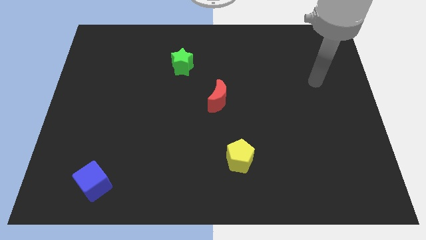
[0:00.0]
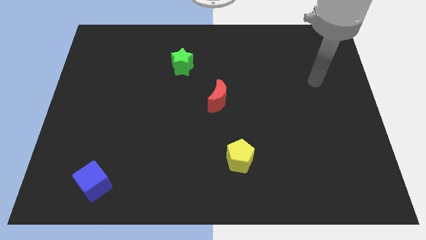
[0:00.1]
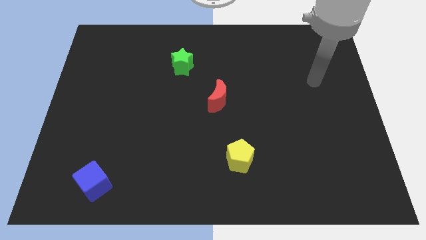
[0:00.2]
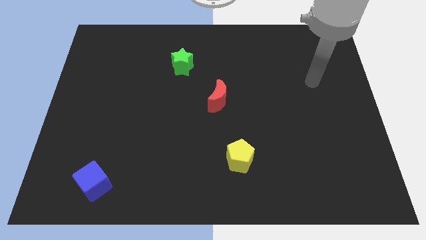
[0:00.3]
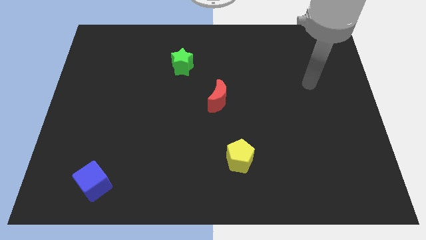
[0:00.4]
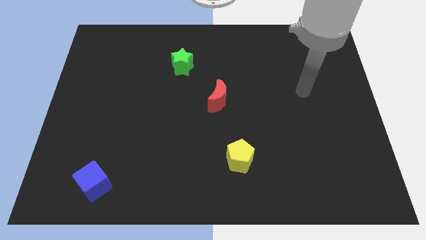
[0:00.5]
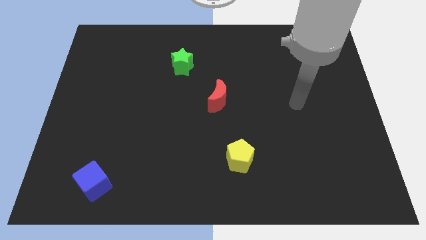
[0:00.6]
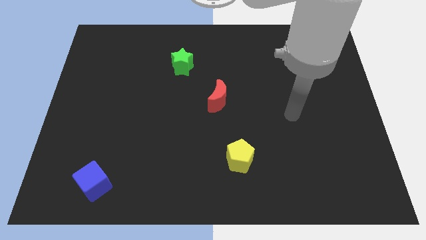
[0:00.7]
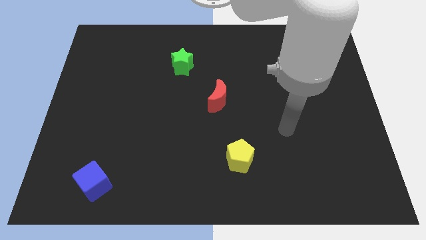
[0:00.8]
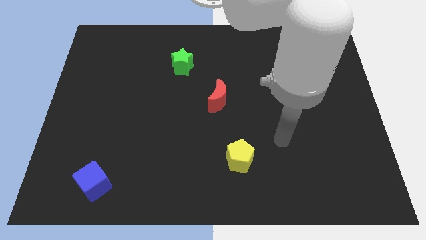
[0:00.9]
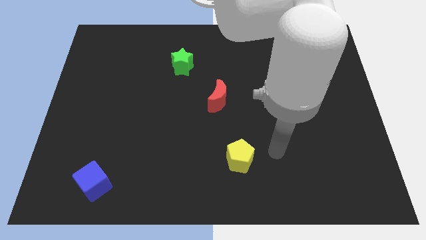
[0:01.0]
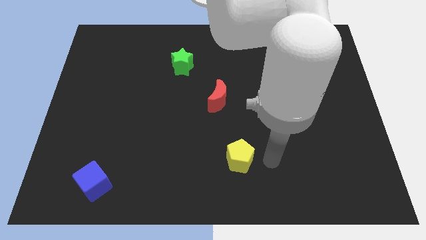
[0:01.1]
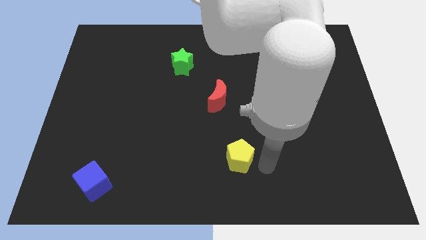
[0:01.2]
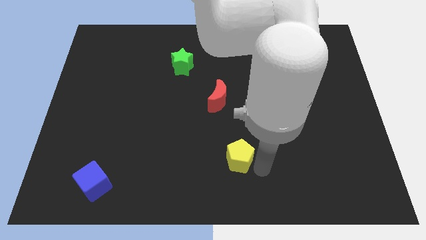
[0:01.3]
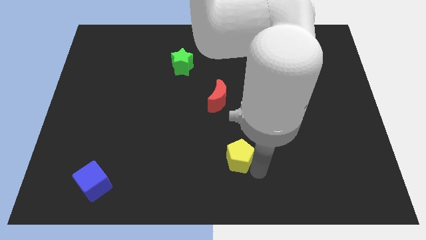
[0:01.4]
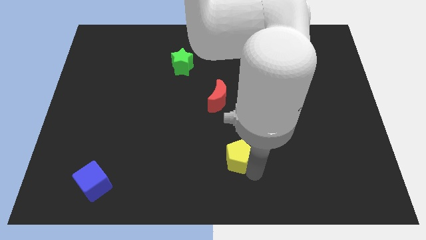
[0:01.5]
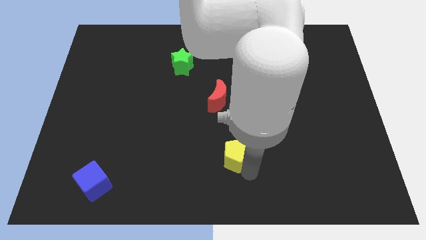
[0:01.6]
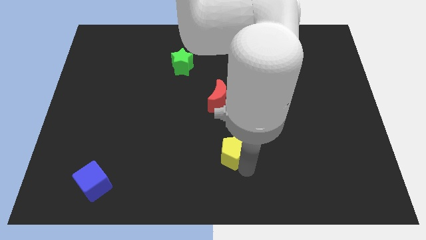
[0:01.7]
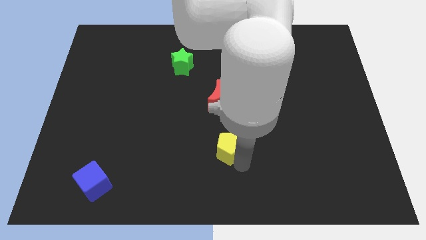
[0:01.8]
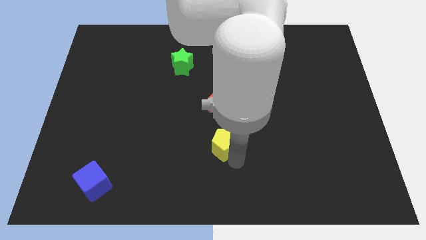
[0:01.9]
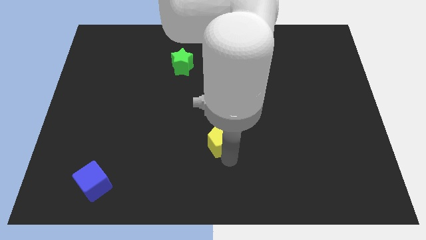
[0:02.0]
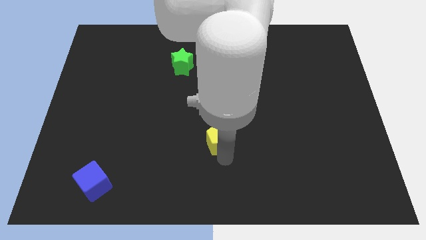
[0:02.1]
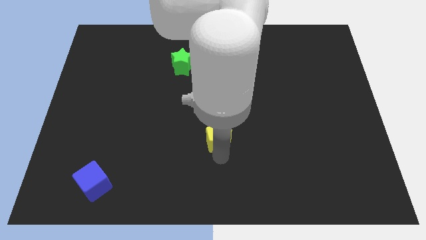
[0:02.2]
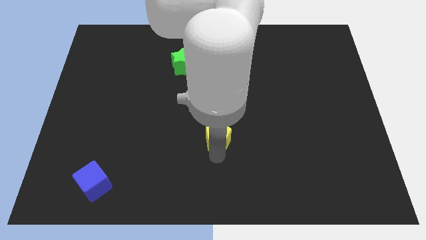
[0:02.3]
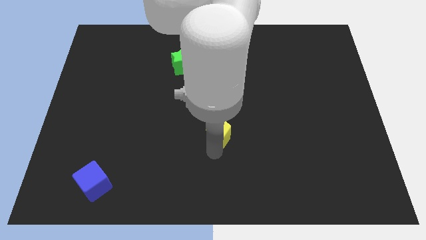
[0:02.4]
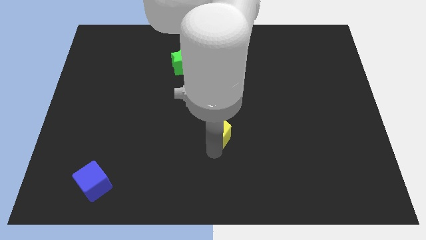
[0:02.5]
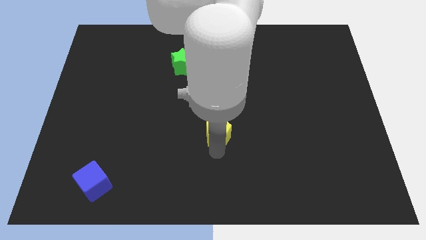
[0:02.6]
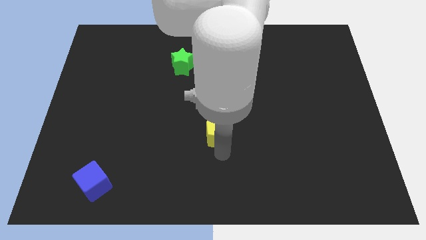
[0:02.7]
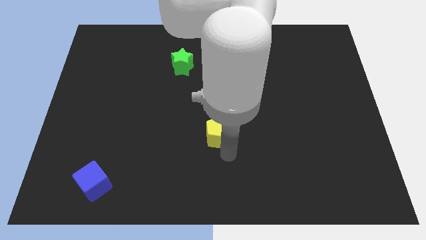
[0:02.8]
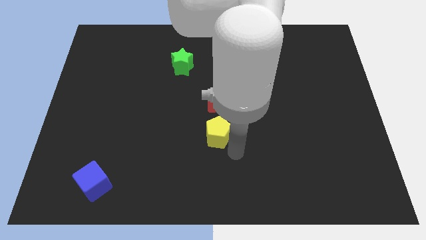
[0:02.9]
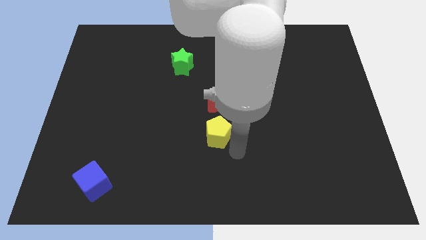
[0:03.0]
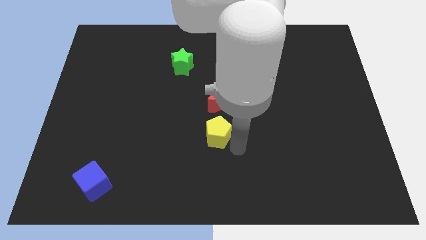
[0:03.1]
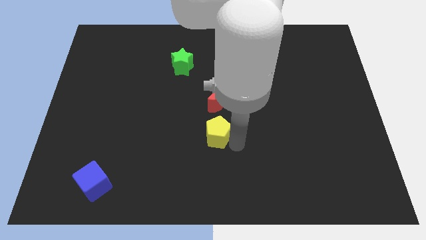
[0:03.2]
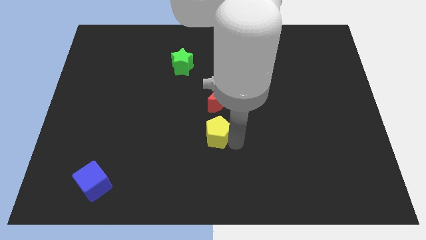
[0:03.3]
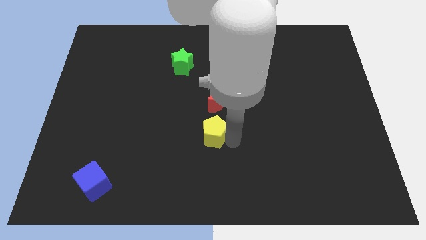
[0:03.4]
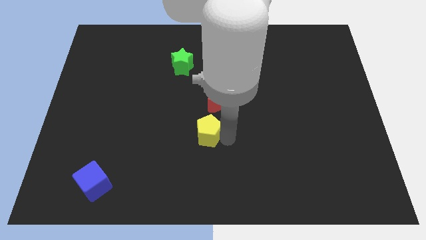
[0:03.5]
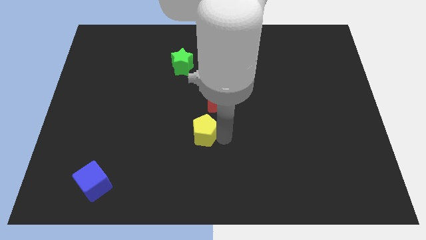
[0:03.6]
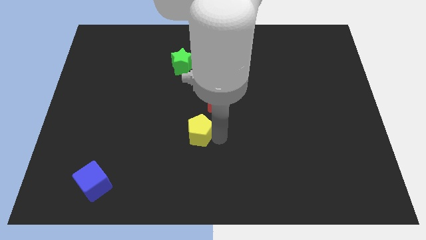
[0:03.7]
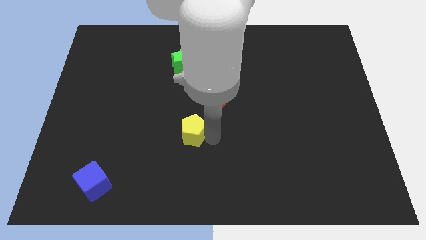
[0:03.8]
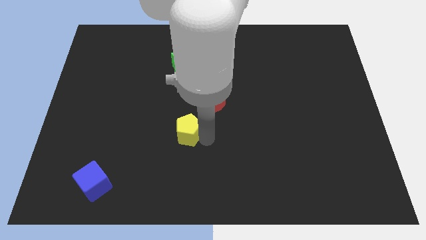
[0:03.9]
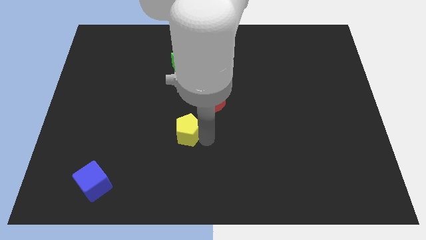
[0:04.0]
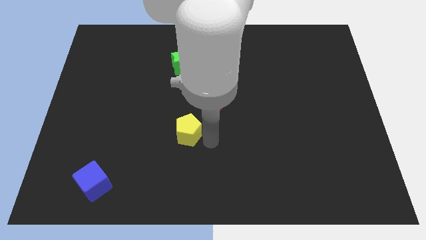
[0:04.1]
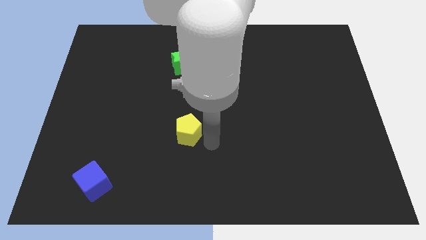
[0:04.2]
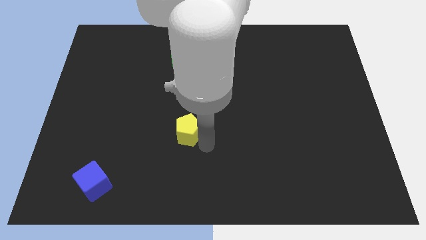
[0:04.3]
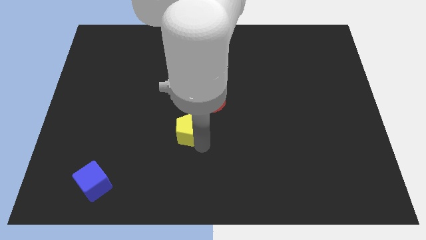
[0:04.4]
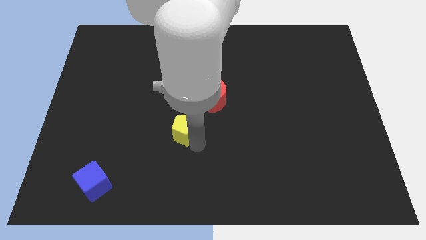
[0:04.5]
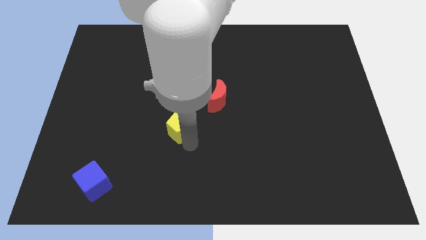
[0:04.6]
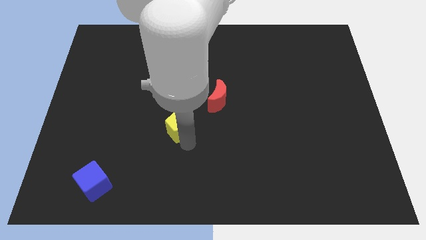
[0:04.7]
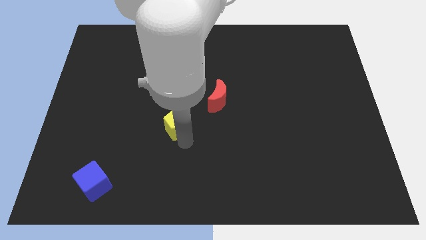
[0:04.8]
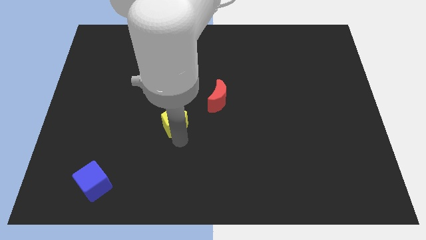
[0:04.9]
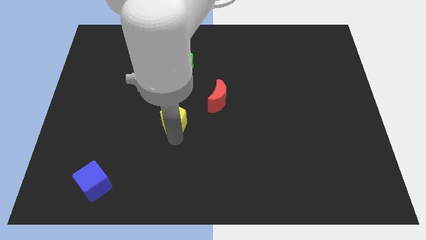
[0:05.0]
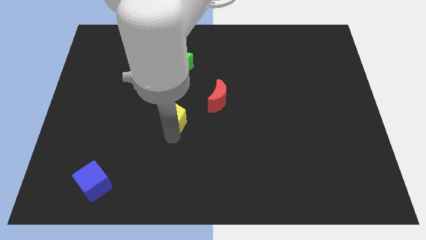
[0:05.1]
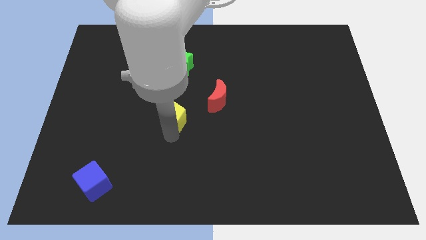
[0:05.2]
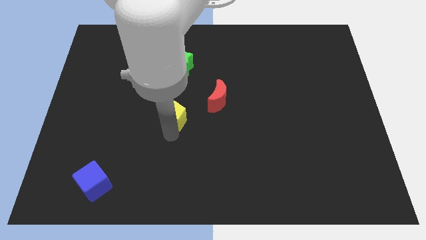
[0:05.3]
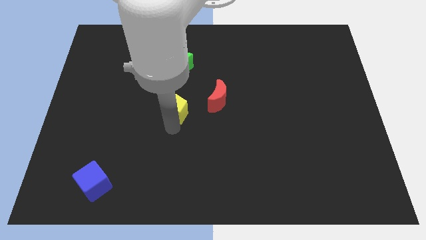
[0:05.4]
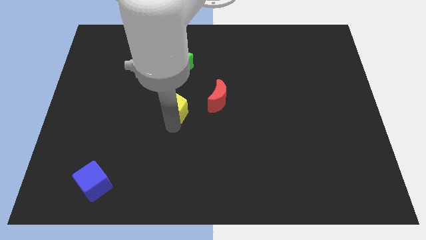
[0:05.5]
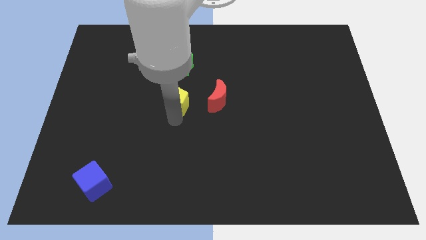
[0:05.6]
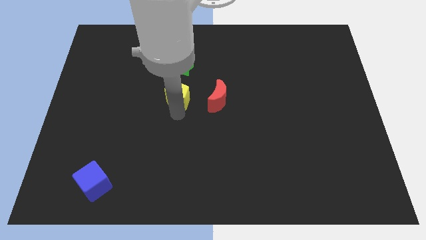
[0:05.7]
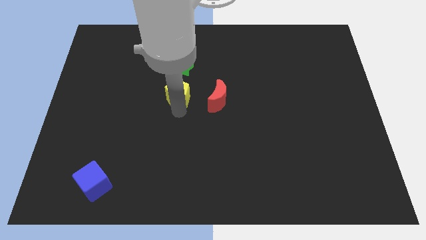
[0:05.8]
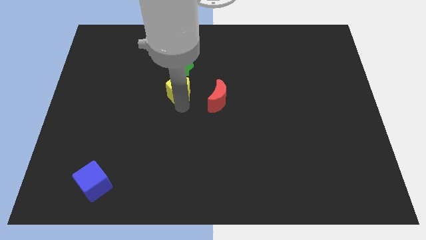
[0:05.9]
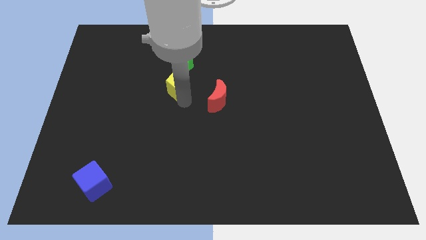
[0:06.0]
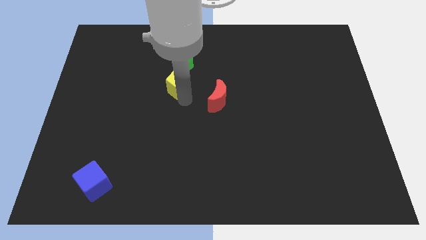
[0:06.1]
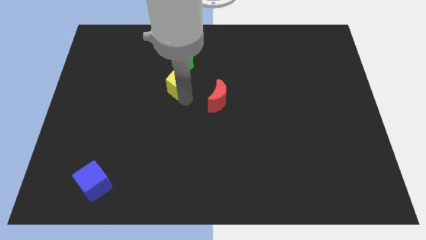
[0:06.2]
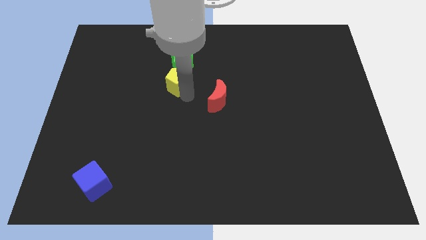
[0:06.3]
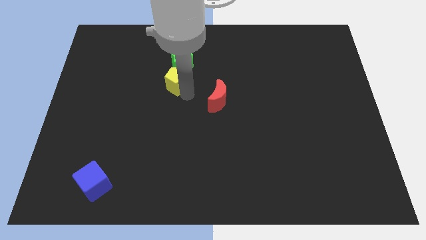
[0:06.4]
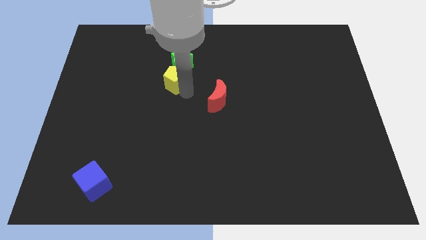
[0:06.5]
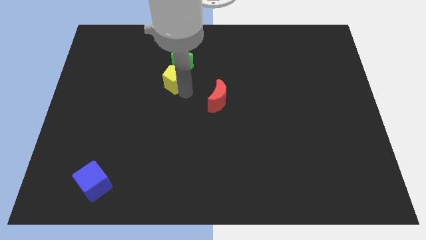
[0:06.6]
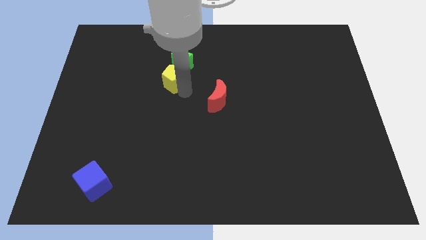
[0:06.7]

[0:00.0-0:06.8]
slide the pentagon next to the green block

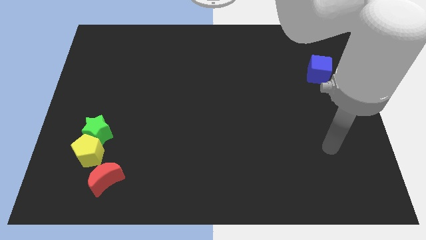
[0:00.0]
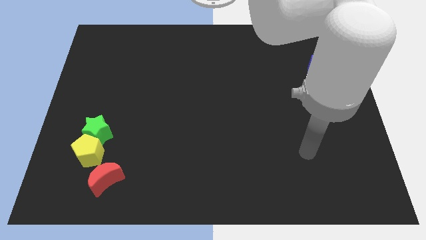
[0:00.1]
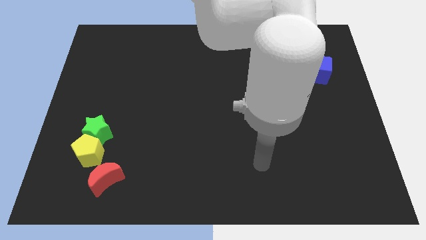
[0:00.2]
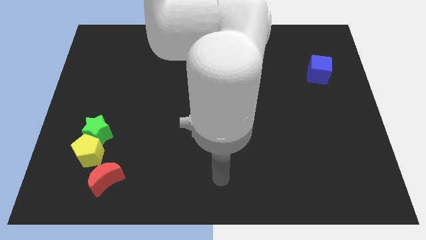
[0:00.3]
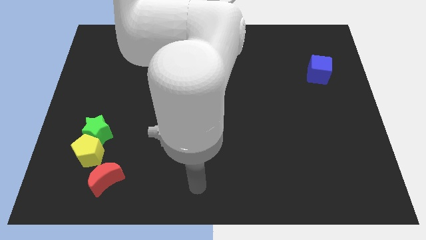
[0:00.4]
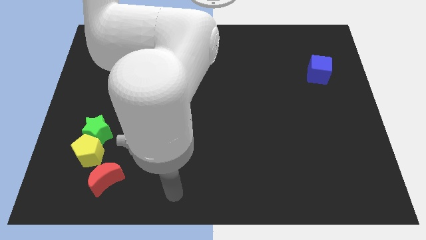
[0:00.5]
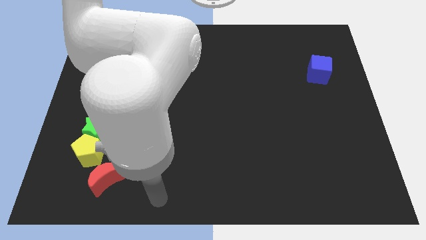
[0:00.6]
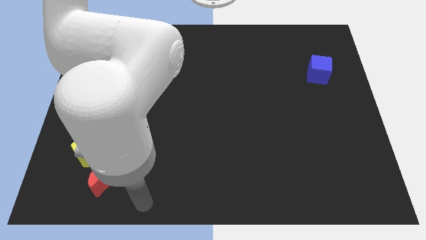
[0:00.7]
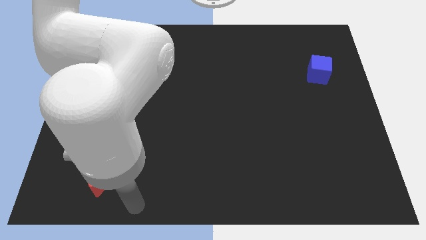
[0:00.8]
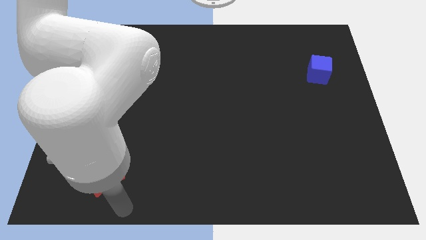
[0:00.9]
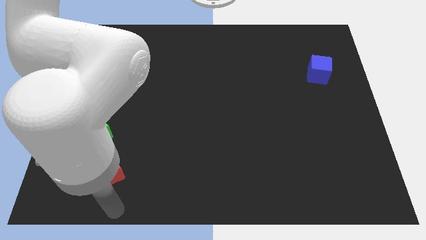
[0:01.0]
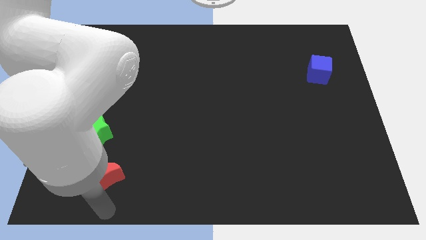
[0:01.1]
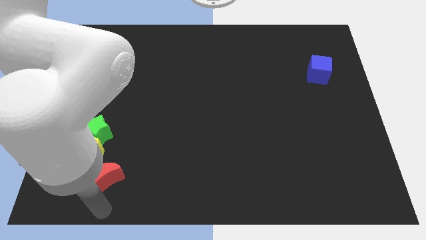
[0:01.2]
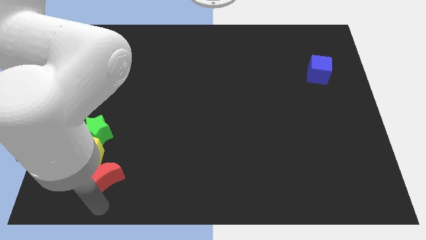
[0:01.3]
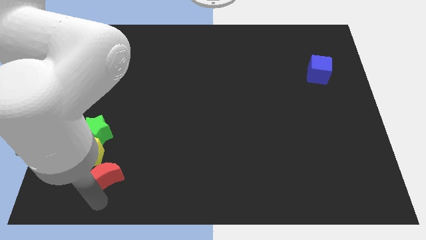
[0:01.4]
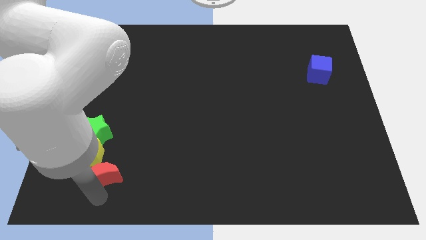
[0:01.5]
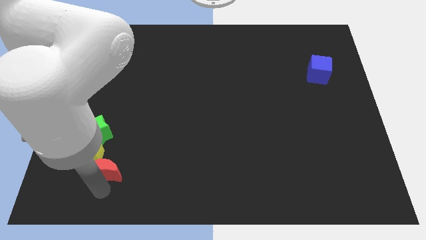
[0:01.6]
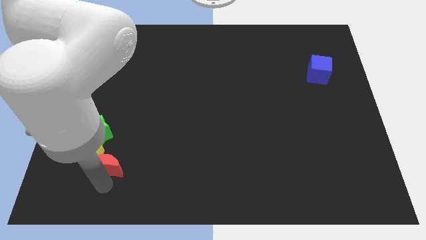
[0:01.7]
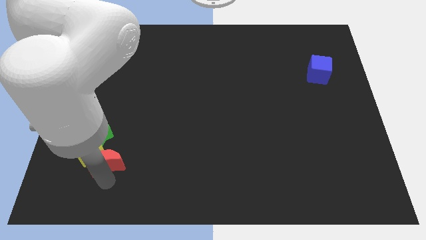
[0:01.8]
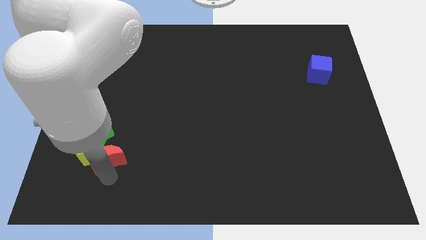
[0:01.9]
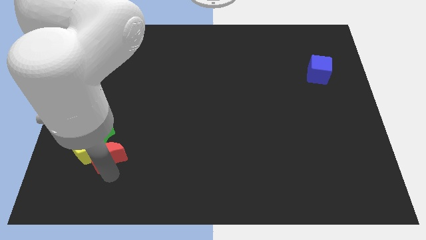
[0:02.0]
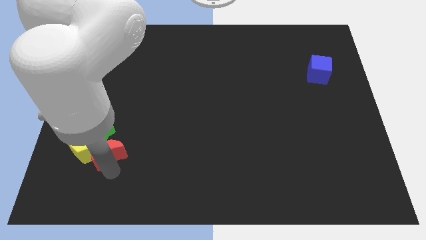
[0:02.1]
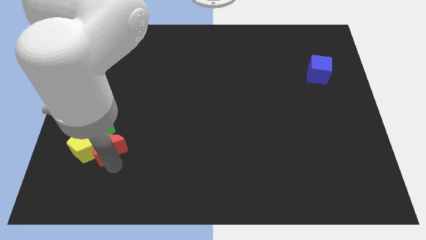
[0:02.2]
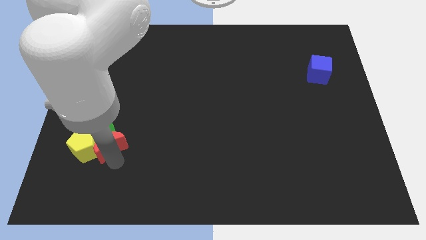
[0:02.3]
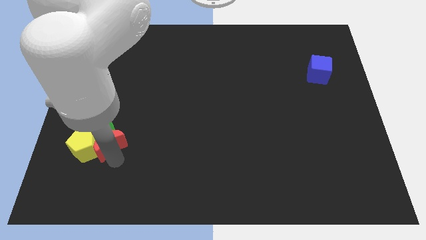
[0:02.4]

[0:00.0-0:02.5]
slide the moon next to the green block
